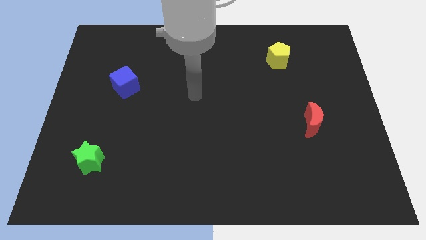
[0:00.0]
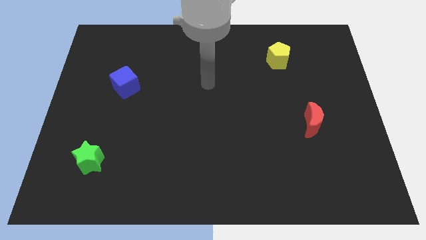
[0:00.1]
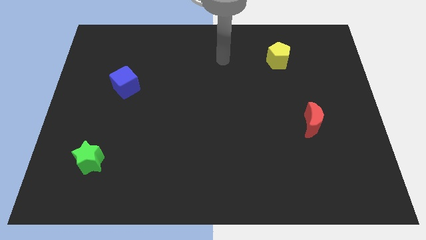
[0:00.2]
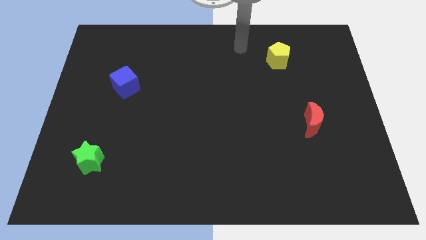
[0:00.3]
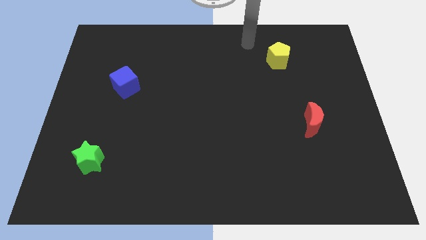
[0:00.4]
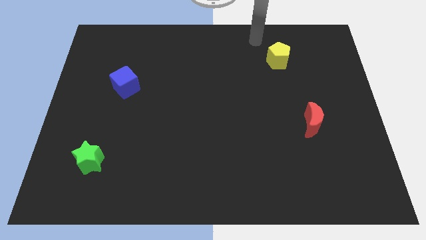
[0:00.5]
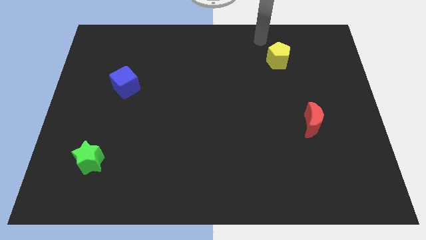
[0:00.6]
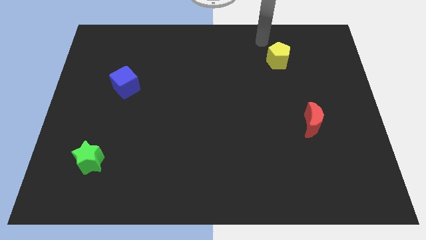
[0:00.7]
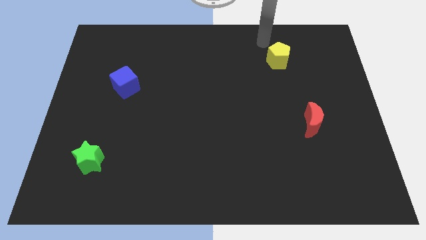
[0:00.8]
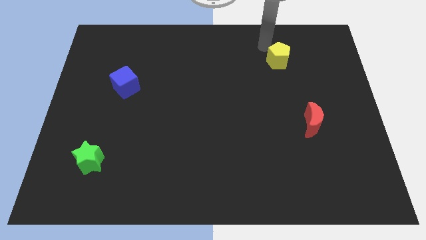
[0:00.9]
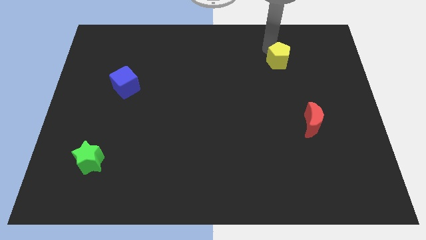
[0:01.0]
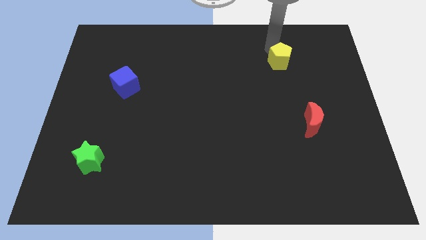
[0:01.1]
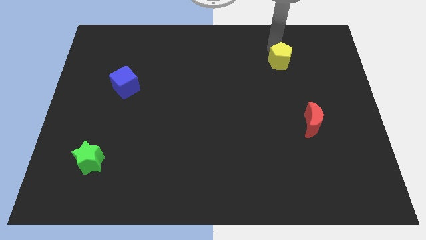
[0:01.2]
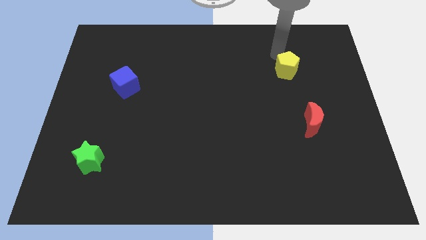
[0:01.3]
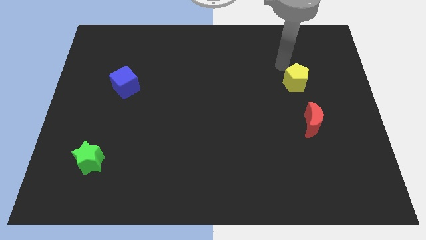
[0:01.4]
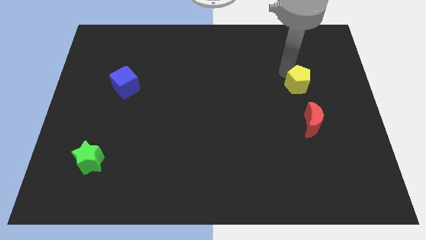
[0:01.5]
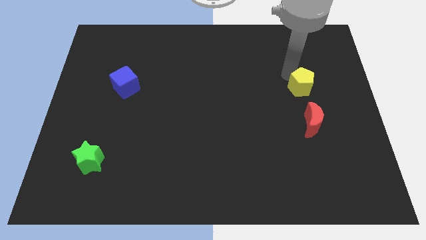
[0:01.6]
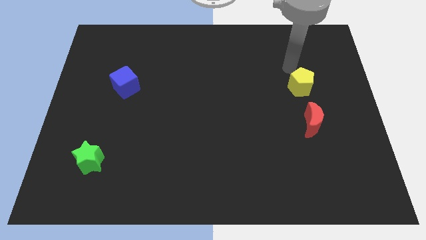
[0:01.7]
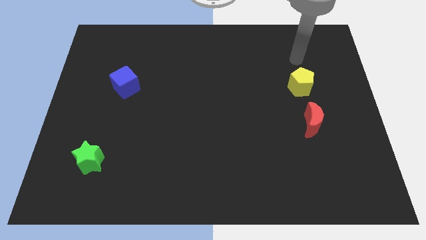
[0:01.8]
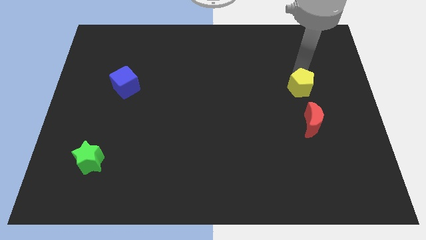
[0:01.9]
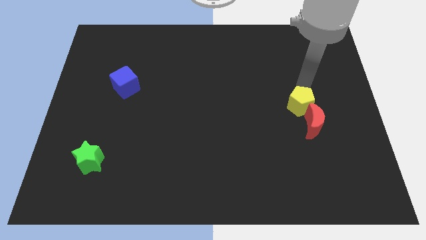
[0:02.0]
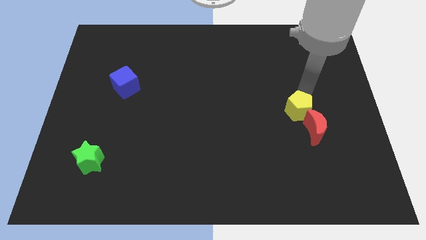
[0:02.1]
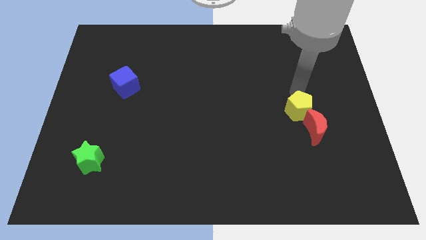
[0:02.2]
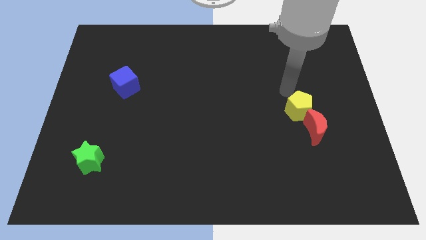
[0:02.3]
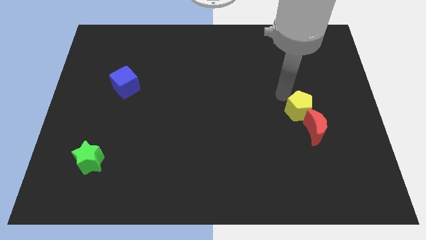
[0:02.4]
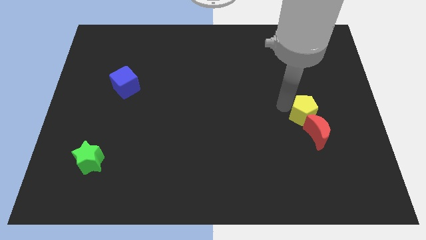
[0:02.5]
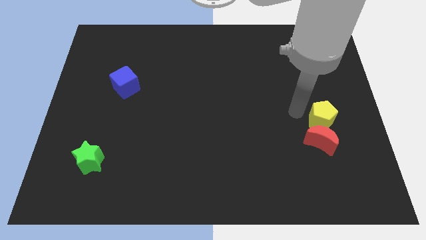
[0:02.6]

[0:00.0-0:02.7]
push the yellow block next to the red block

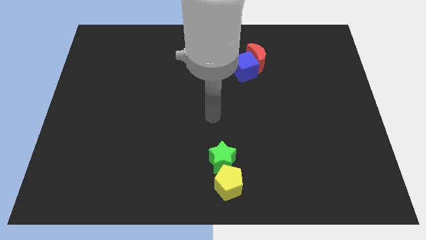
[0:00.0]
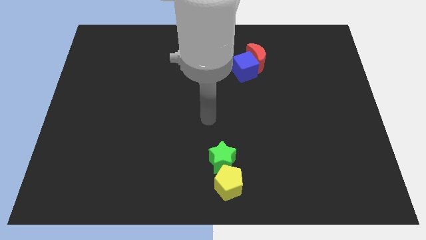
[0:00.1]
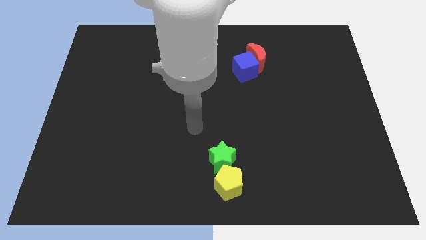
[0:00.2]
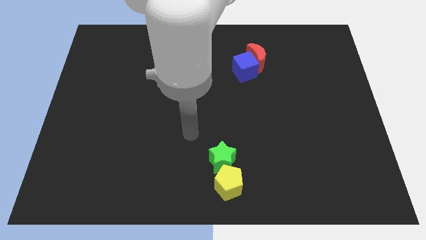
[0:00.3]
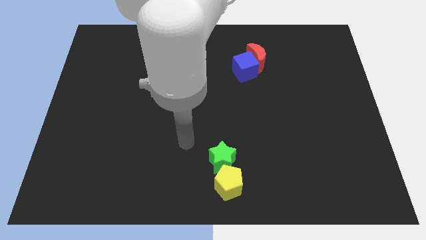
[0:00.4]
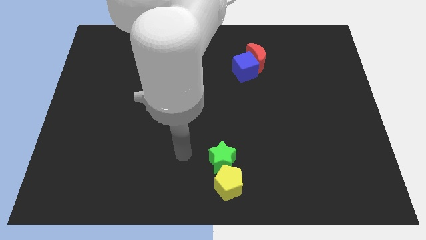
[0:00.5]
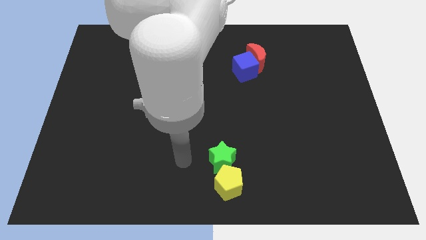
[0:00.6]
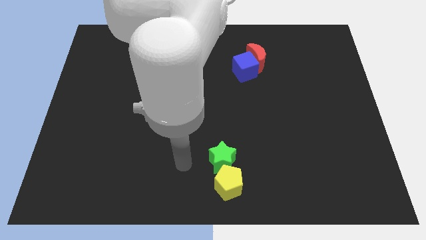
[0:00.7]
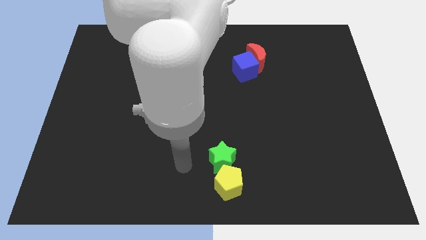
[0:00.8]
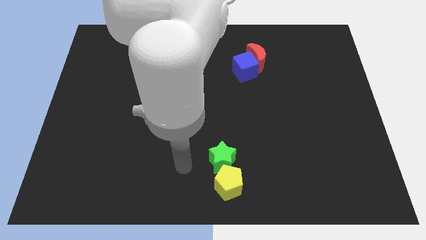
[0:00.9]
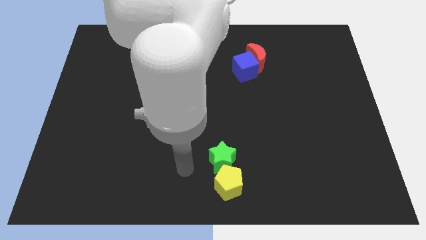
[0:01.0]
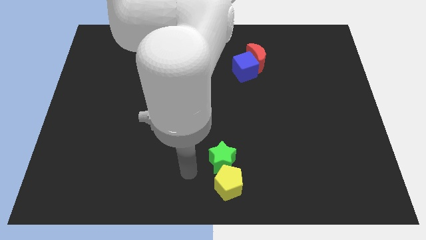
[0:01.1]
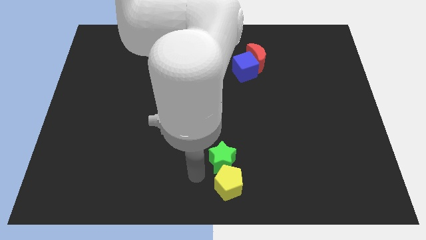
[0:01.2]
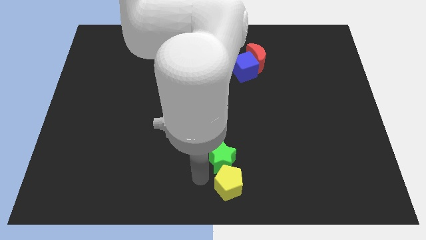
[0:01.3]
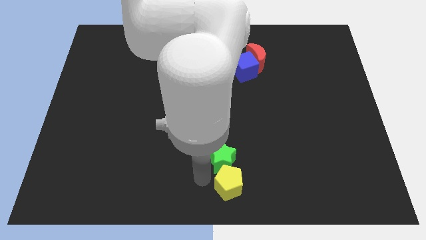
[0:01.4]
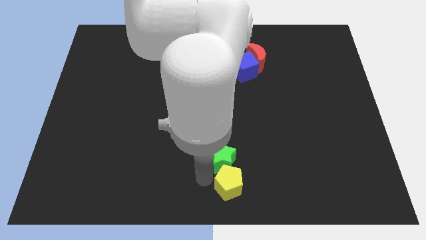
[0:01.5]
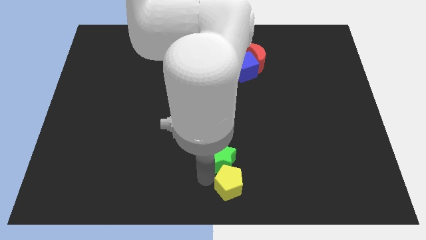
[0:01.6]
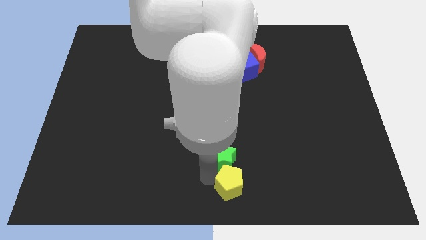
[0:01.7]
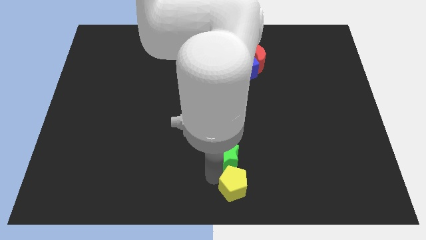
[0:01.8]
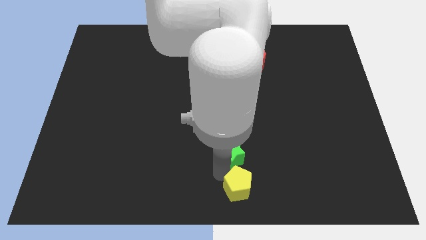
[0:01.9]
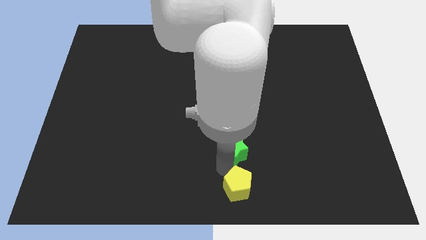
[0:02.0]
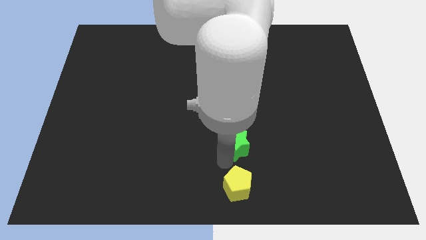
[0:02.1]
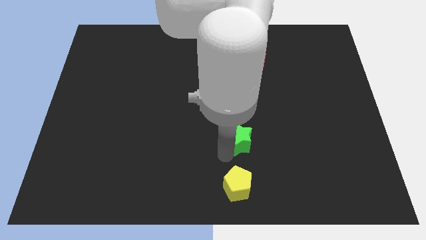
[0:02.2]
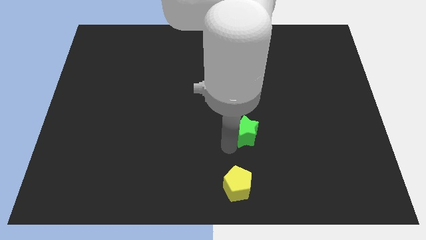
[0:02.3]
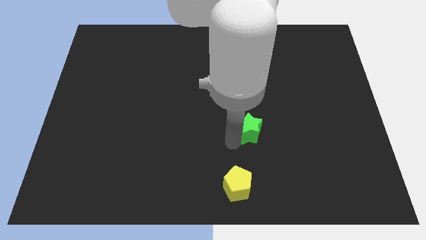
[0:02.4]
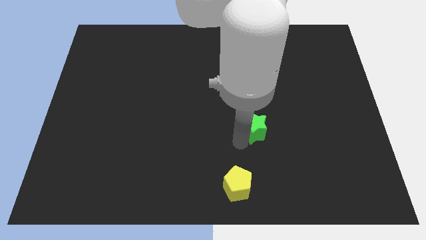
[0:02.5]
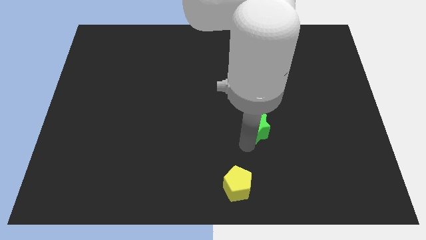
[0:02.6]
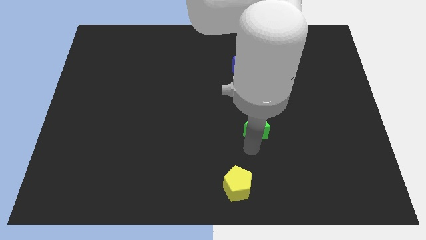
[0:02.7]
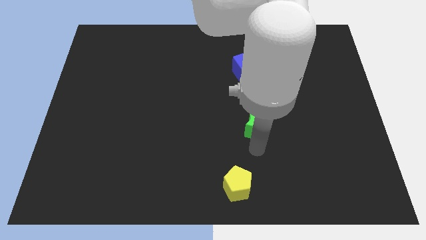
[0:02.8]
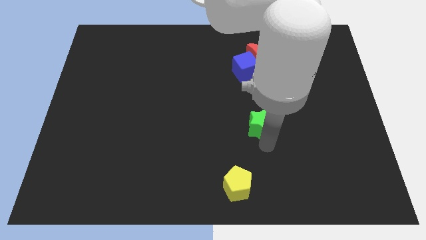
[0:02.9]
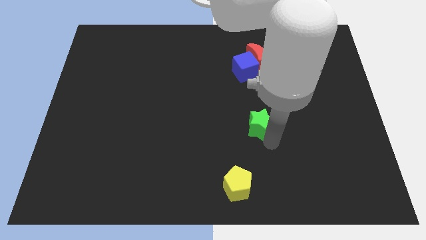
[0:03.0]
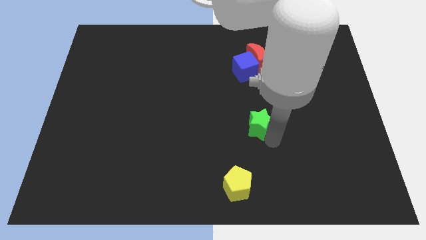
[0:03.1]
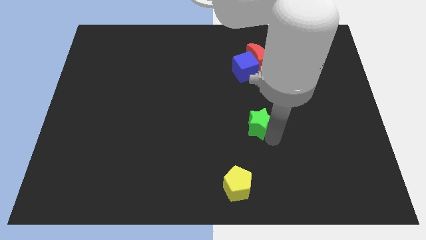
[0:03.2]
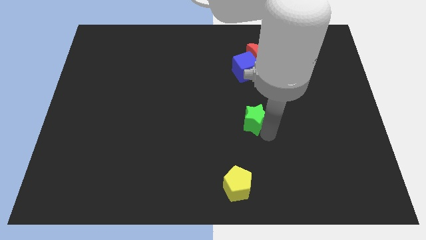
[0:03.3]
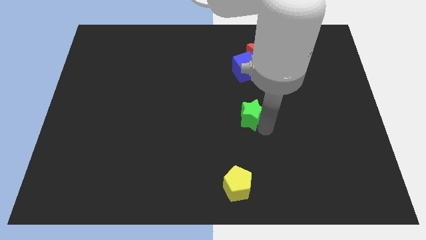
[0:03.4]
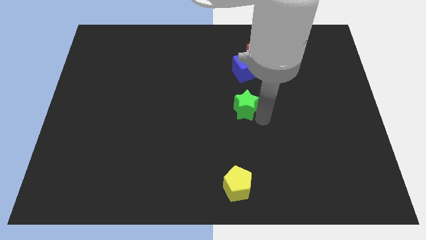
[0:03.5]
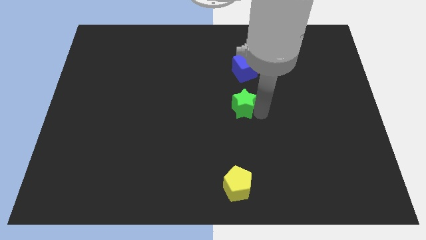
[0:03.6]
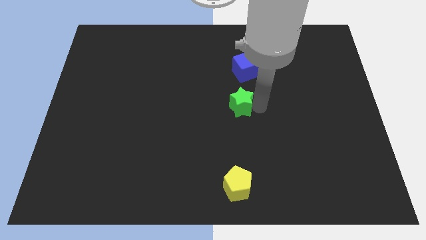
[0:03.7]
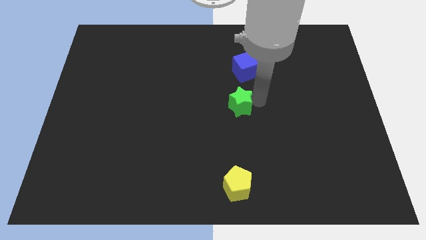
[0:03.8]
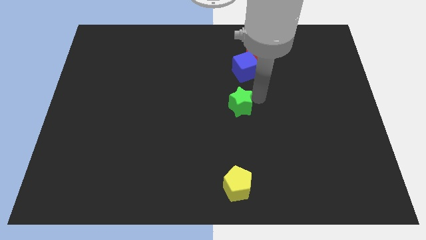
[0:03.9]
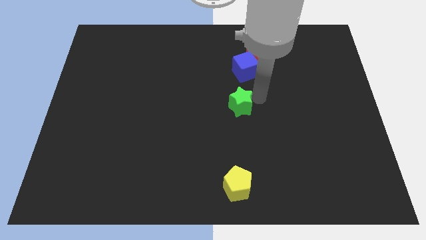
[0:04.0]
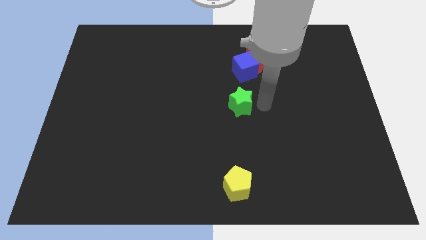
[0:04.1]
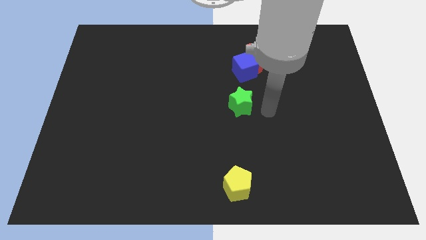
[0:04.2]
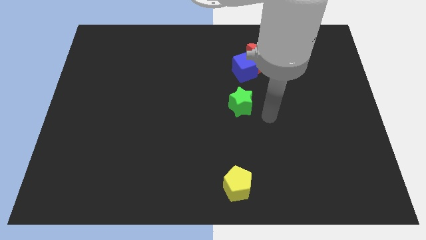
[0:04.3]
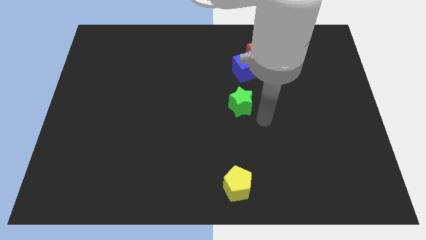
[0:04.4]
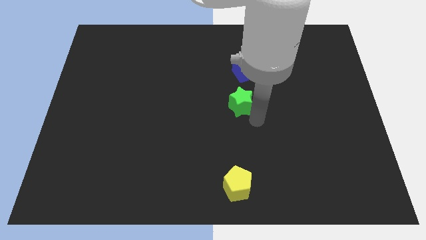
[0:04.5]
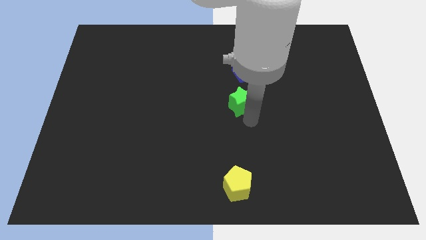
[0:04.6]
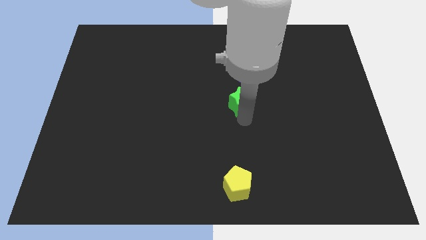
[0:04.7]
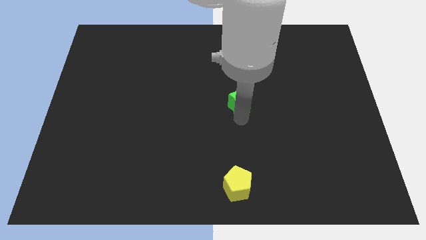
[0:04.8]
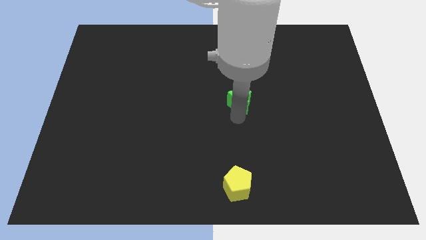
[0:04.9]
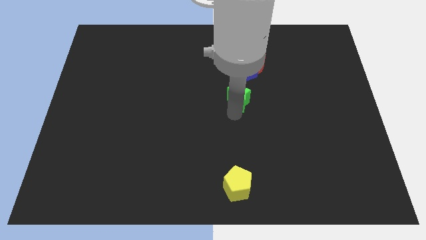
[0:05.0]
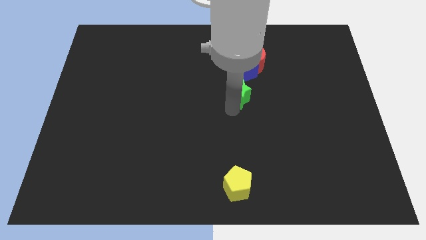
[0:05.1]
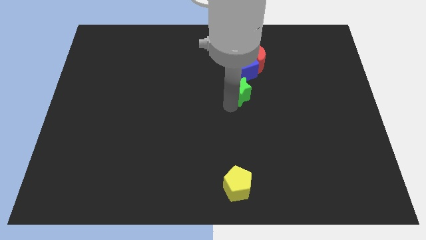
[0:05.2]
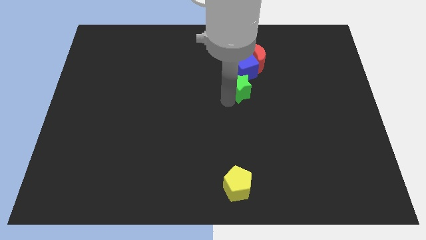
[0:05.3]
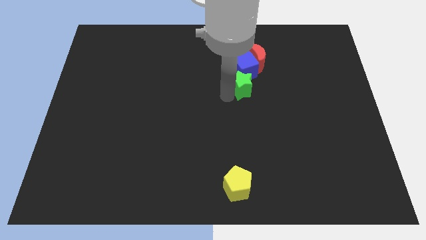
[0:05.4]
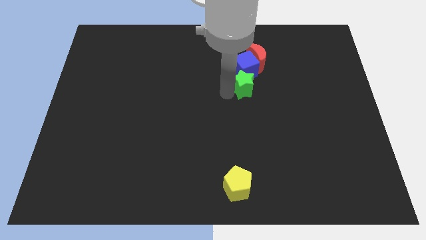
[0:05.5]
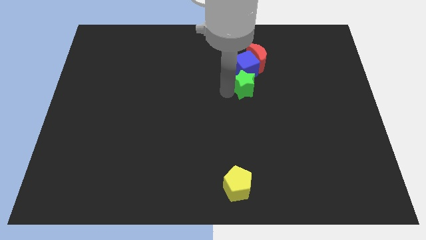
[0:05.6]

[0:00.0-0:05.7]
push the green block towards the blue block

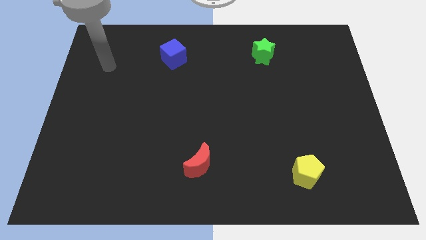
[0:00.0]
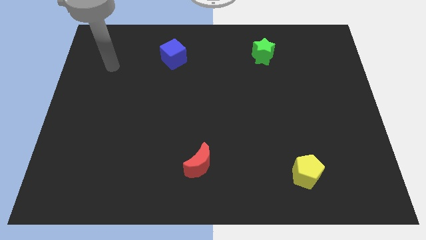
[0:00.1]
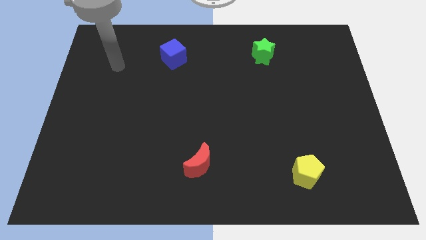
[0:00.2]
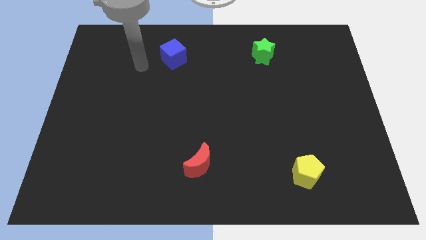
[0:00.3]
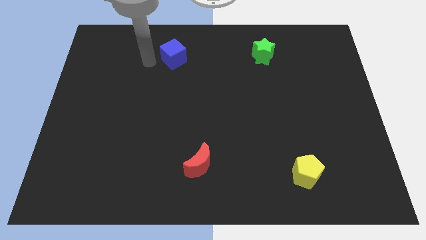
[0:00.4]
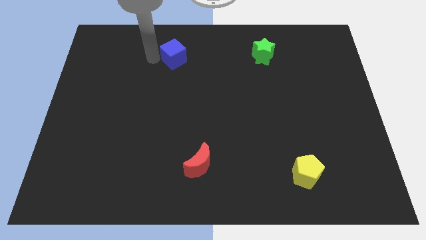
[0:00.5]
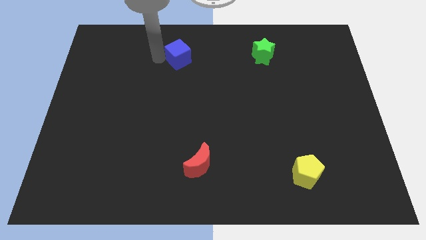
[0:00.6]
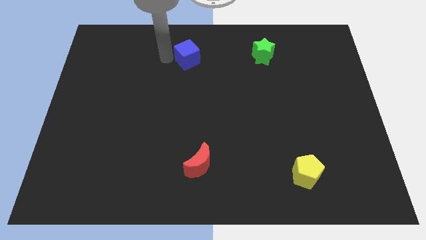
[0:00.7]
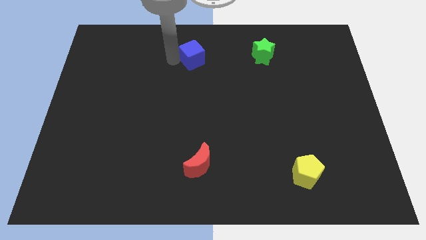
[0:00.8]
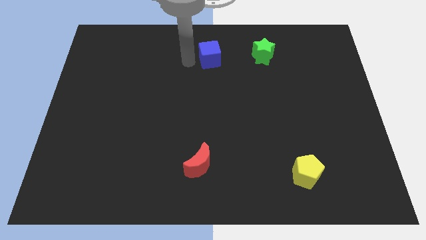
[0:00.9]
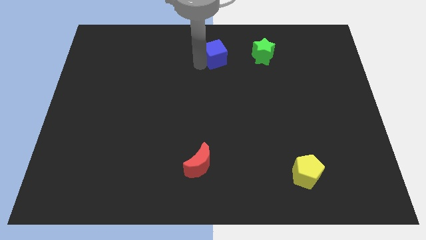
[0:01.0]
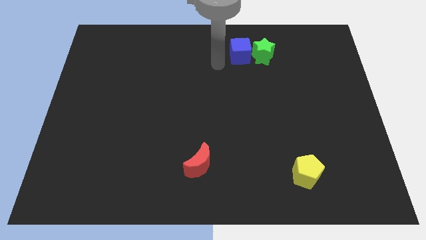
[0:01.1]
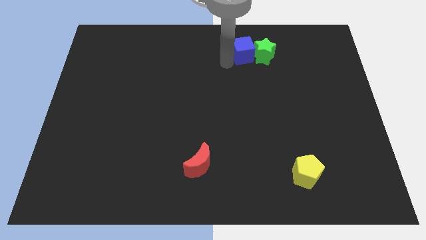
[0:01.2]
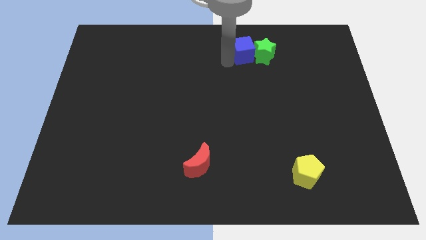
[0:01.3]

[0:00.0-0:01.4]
slide the blue block towards the green star
